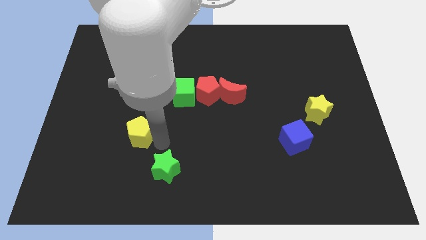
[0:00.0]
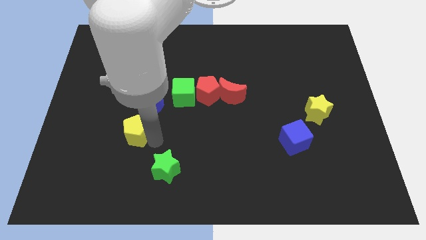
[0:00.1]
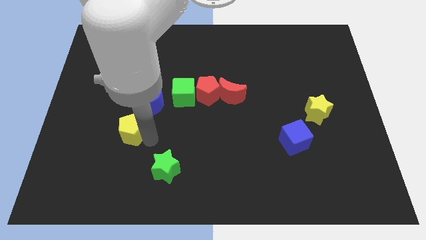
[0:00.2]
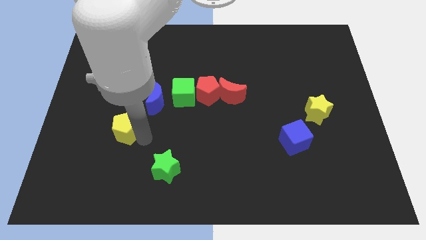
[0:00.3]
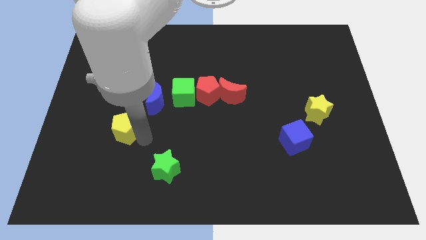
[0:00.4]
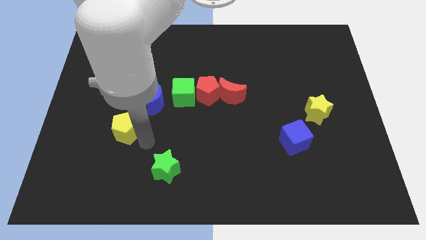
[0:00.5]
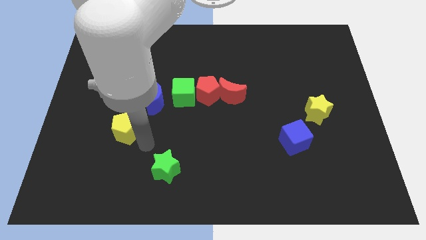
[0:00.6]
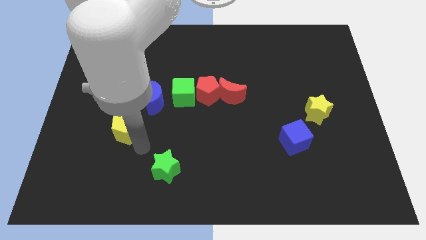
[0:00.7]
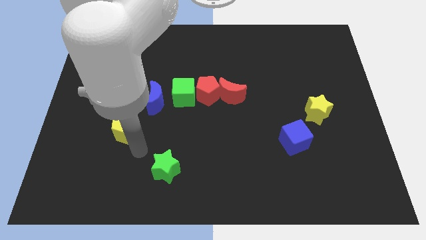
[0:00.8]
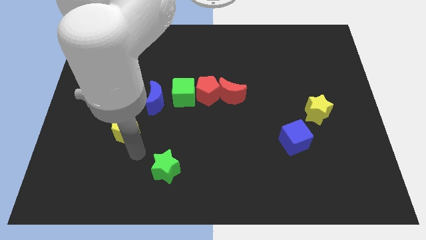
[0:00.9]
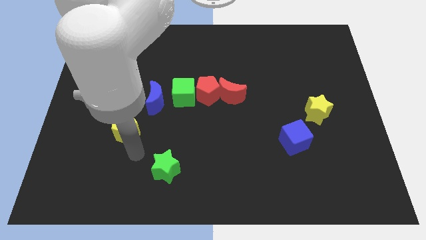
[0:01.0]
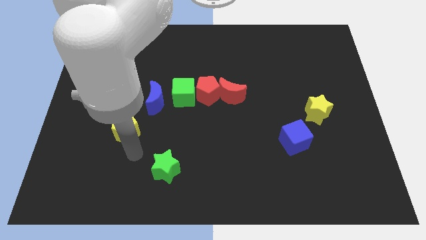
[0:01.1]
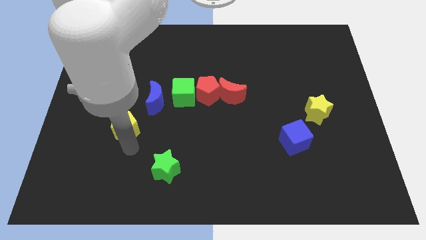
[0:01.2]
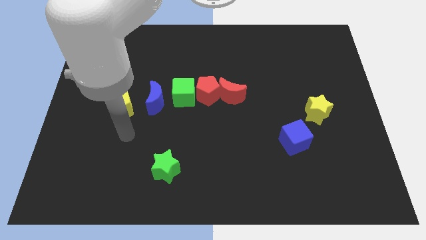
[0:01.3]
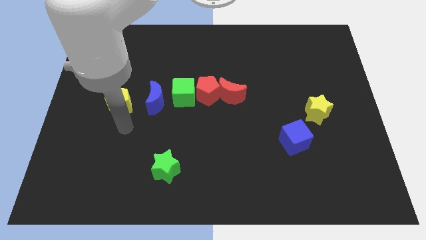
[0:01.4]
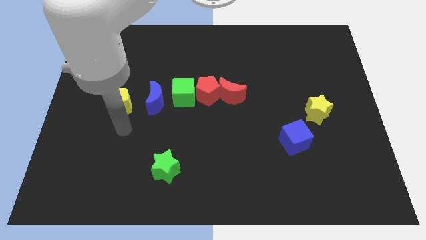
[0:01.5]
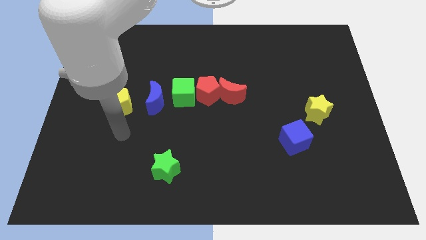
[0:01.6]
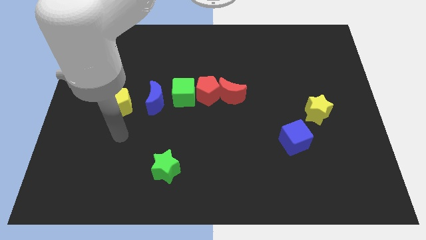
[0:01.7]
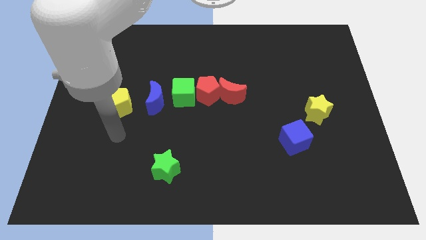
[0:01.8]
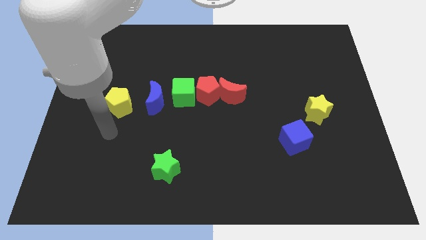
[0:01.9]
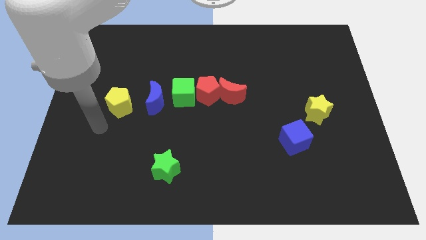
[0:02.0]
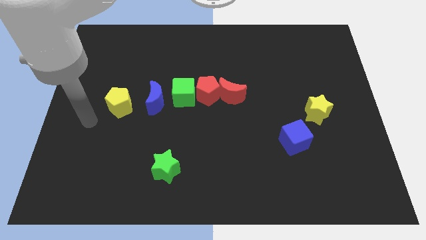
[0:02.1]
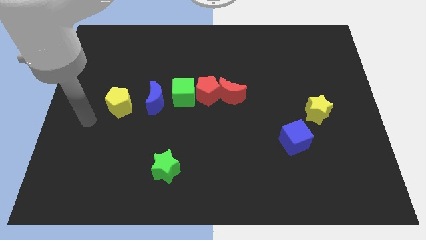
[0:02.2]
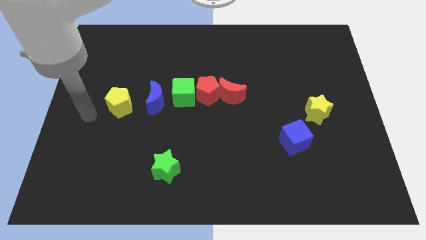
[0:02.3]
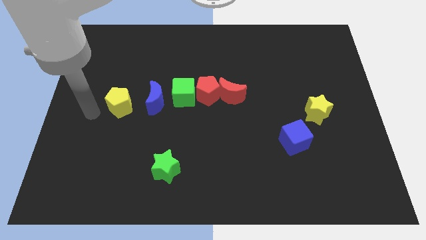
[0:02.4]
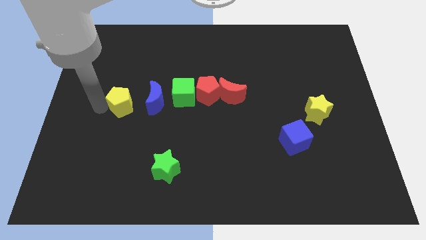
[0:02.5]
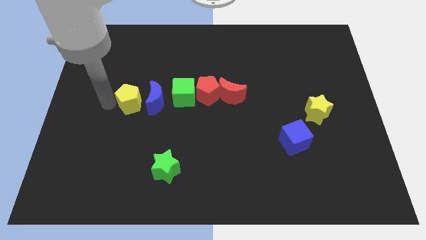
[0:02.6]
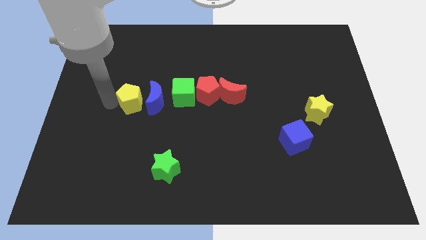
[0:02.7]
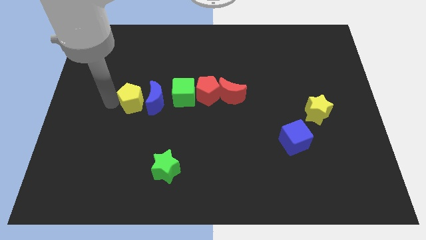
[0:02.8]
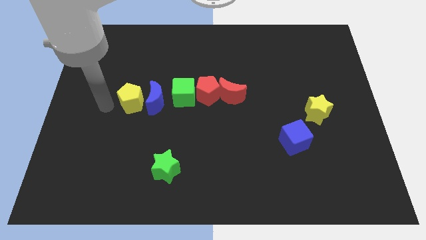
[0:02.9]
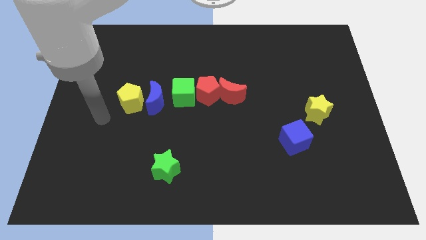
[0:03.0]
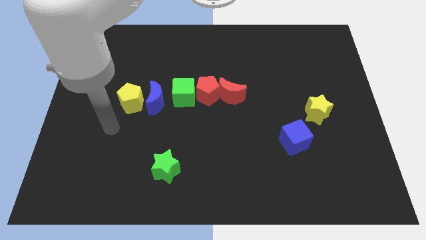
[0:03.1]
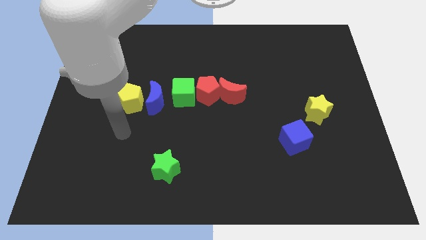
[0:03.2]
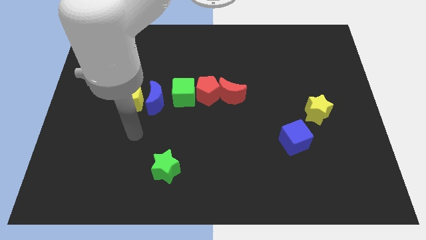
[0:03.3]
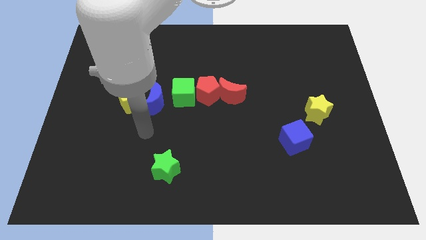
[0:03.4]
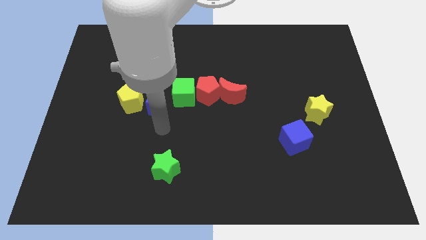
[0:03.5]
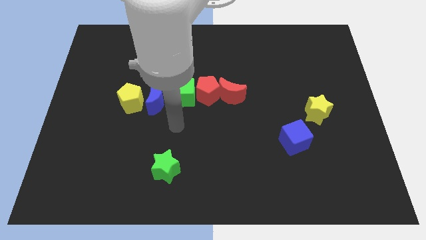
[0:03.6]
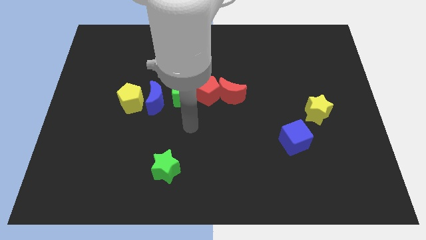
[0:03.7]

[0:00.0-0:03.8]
place the yellow pentagon left of blue moon

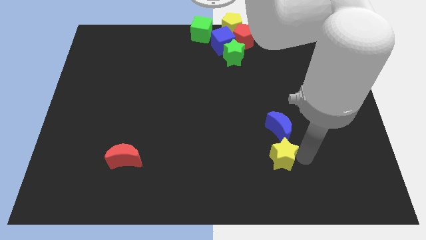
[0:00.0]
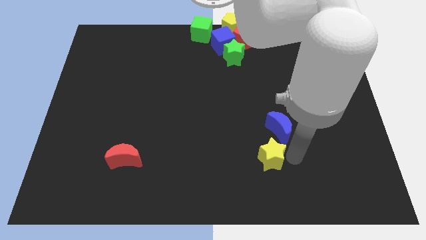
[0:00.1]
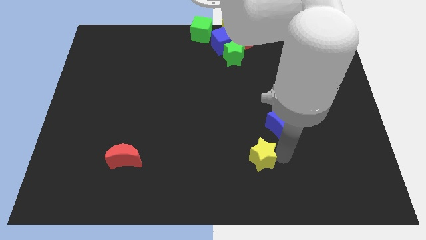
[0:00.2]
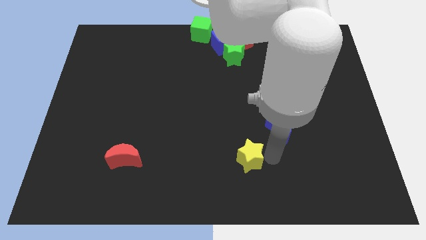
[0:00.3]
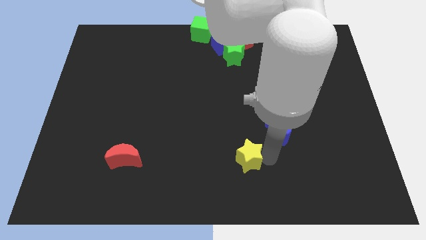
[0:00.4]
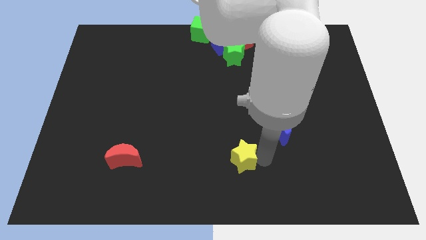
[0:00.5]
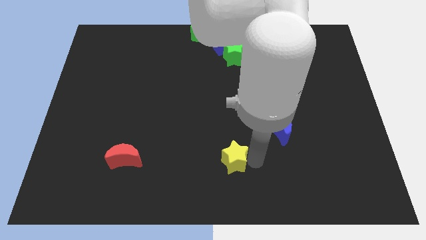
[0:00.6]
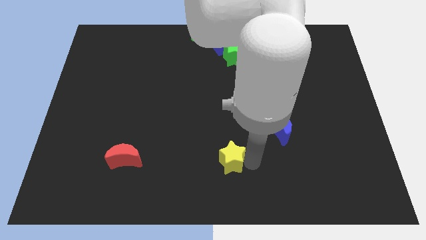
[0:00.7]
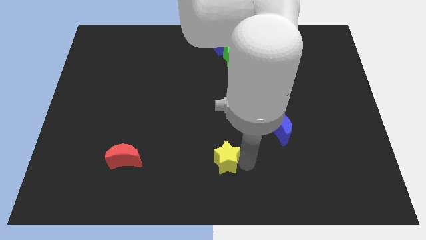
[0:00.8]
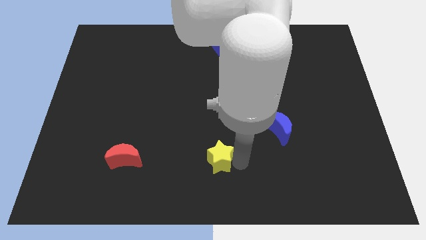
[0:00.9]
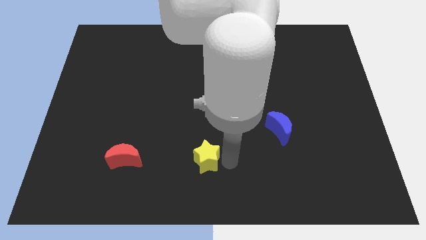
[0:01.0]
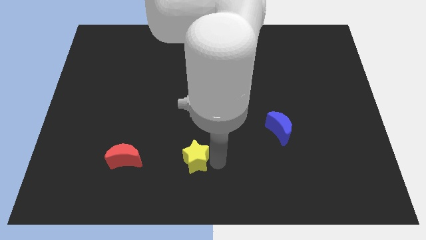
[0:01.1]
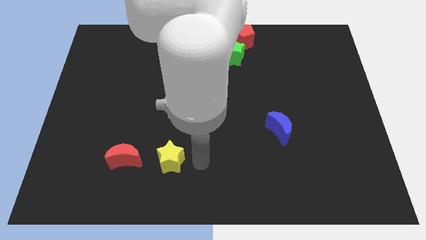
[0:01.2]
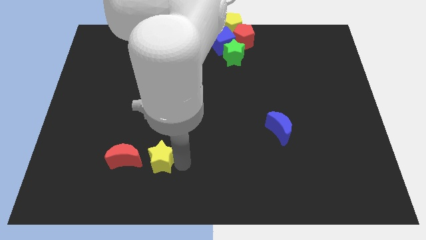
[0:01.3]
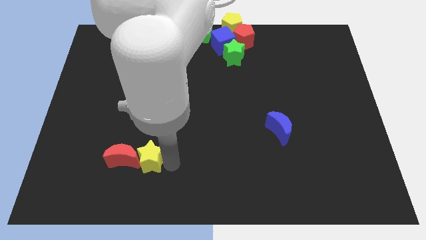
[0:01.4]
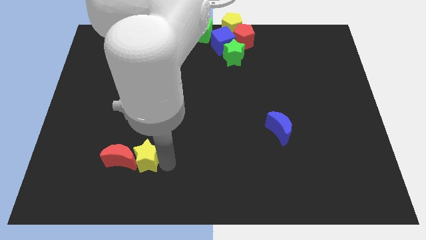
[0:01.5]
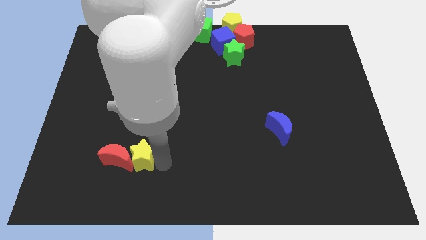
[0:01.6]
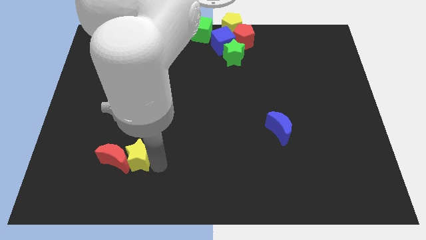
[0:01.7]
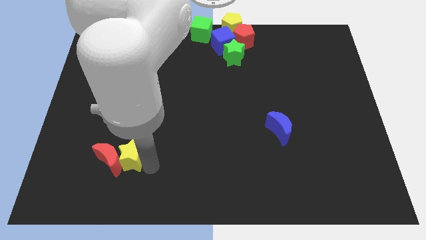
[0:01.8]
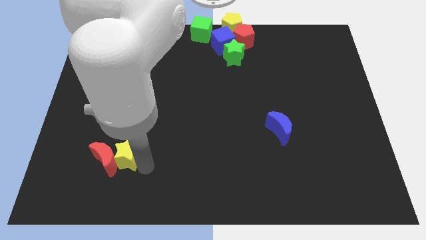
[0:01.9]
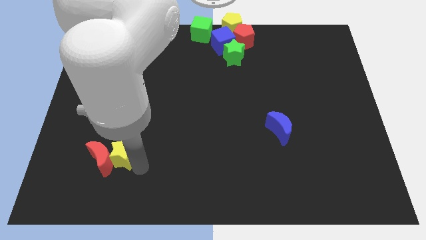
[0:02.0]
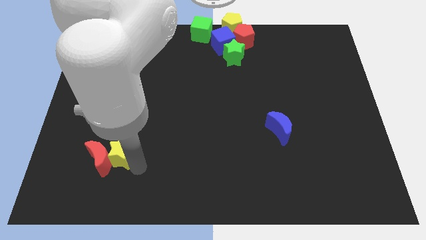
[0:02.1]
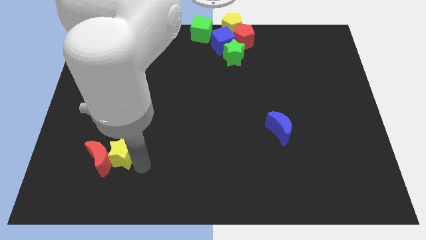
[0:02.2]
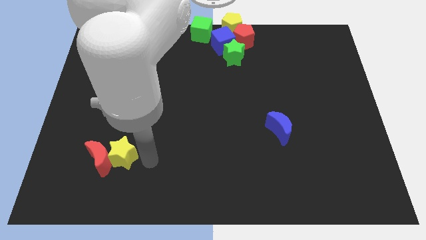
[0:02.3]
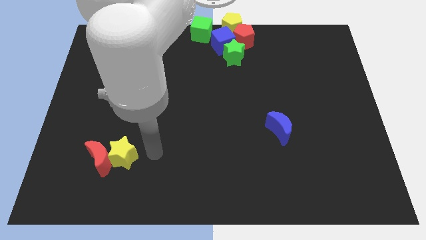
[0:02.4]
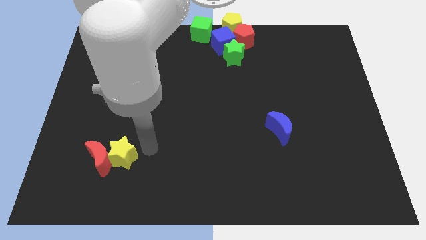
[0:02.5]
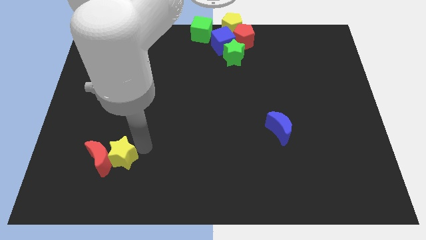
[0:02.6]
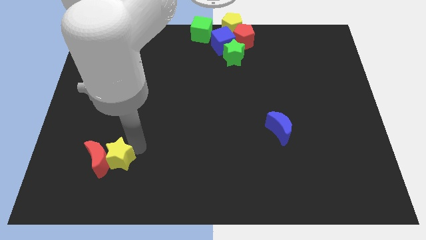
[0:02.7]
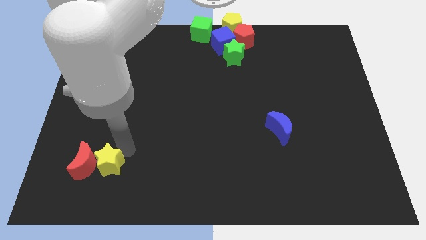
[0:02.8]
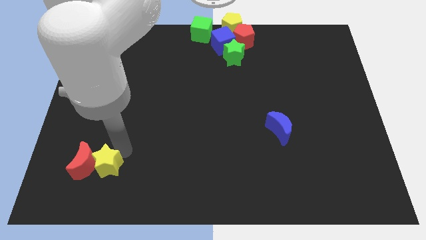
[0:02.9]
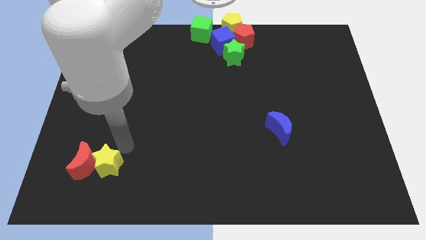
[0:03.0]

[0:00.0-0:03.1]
push the yellow star into the red moon

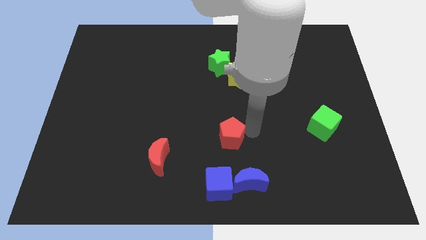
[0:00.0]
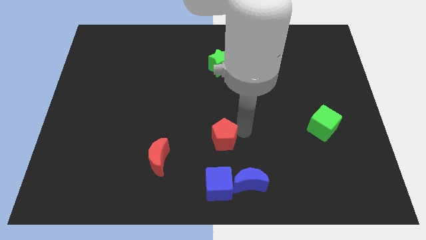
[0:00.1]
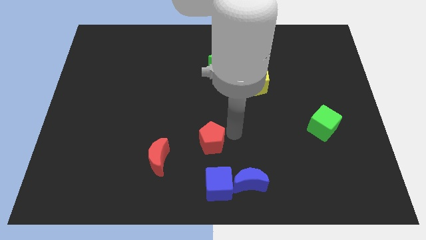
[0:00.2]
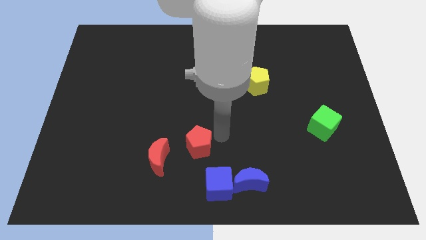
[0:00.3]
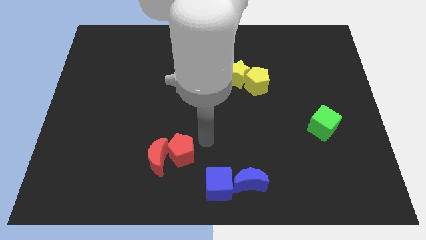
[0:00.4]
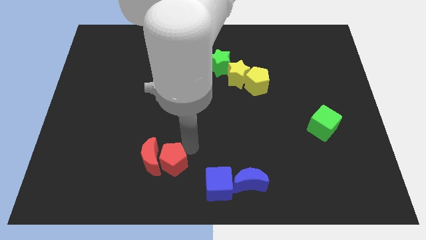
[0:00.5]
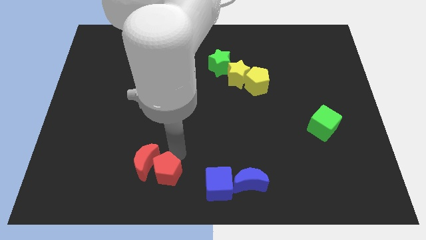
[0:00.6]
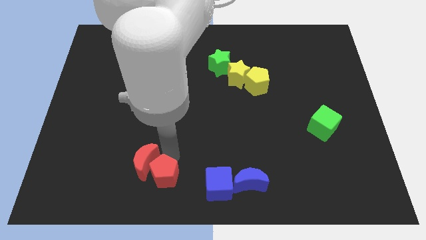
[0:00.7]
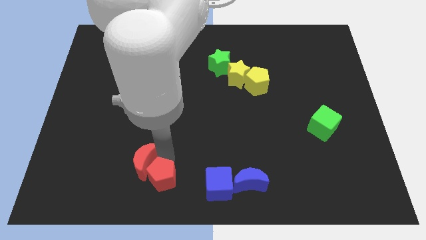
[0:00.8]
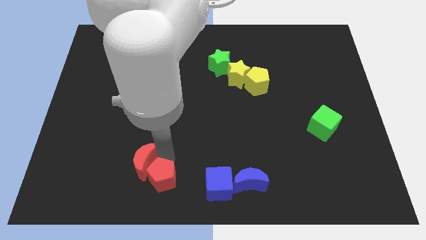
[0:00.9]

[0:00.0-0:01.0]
push the red pentagon into the red moon

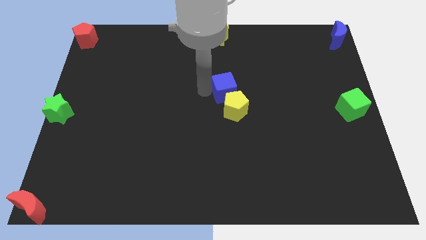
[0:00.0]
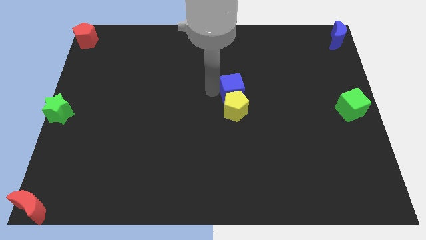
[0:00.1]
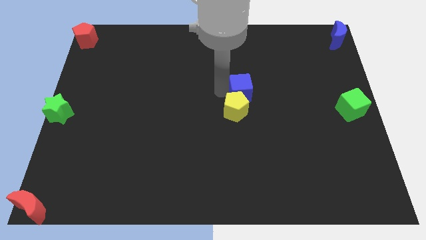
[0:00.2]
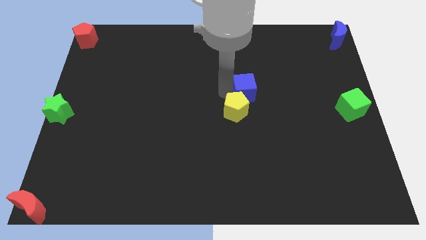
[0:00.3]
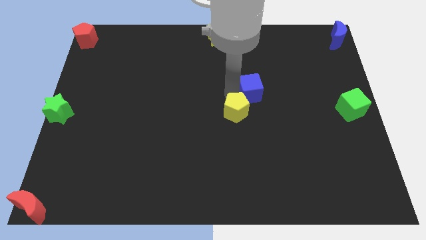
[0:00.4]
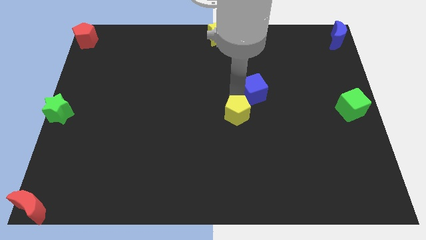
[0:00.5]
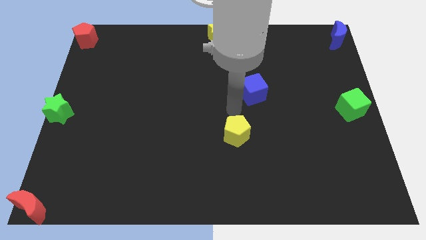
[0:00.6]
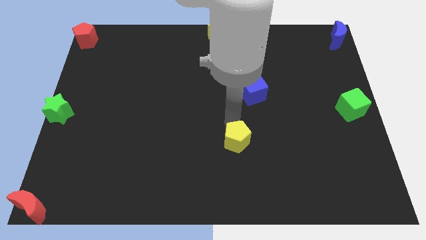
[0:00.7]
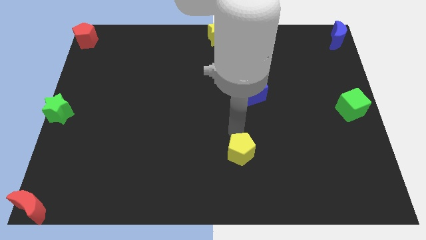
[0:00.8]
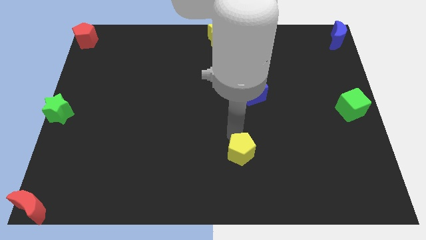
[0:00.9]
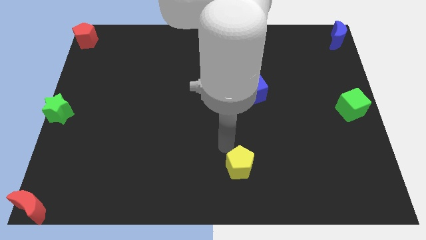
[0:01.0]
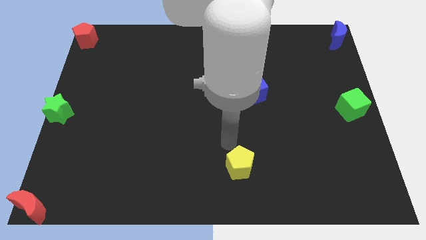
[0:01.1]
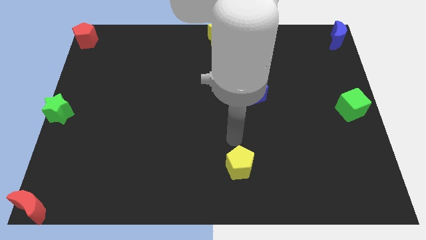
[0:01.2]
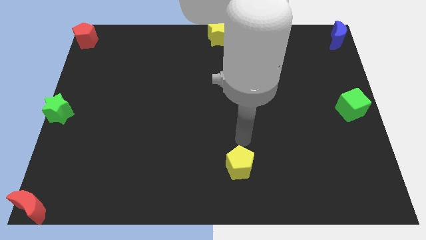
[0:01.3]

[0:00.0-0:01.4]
push the yellow pentagon away from the blue cube
